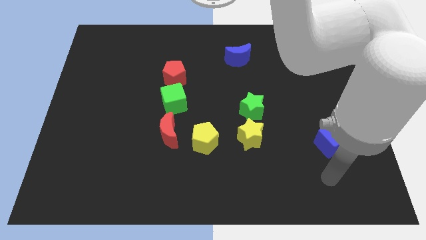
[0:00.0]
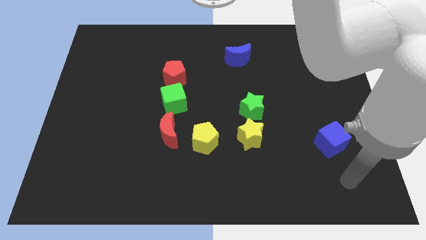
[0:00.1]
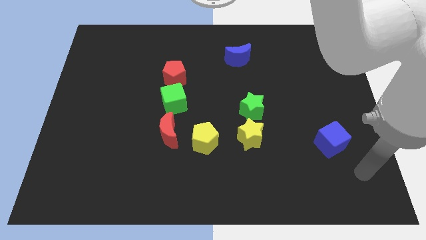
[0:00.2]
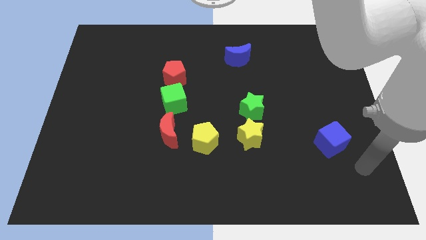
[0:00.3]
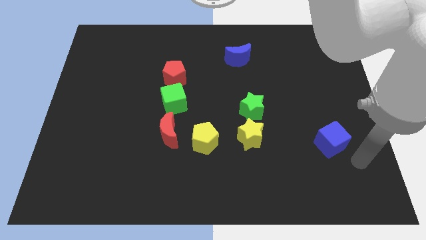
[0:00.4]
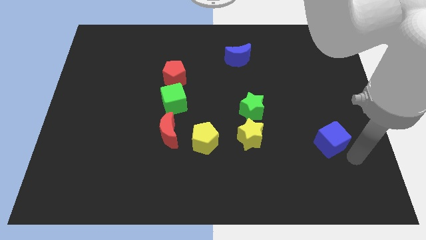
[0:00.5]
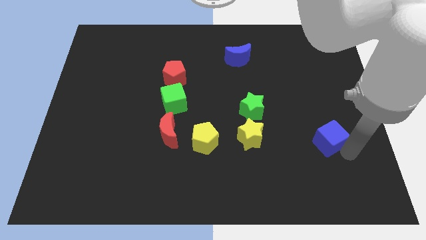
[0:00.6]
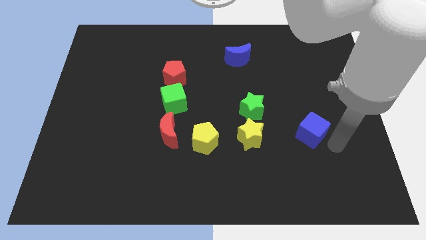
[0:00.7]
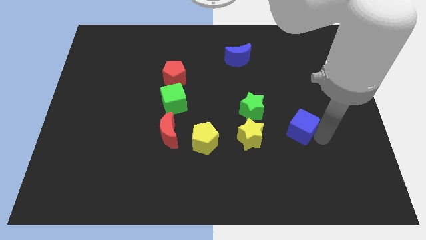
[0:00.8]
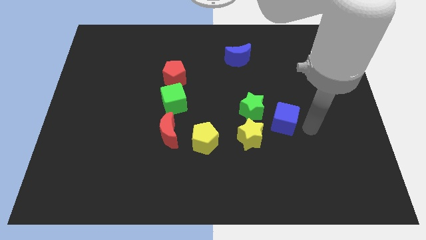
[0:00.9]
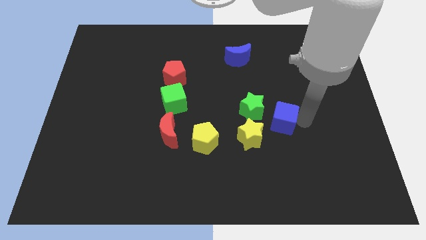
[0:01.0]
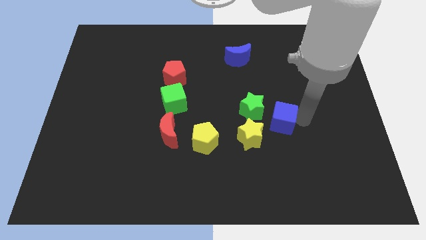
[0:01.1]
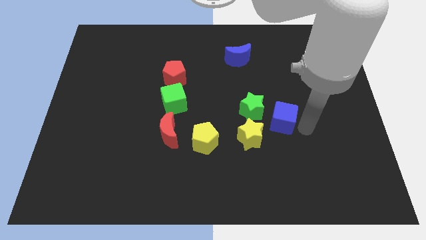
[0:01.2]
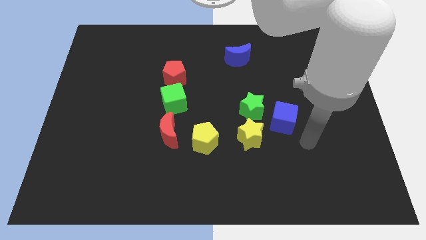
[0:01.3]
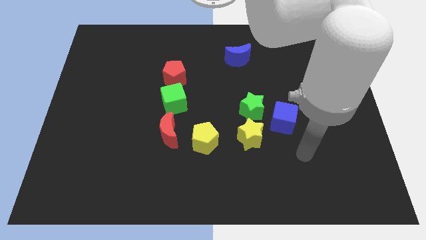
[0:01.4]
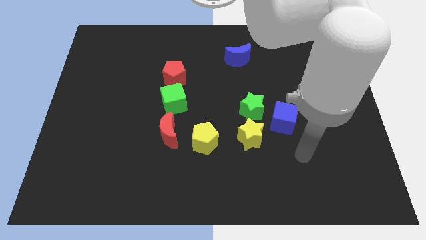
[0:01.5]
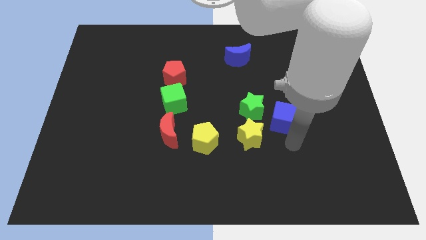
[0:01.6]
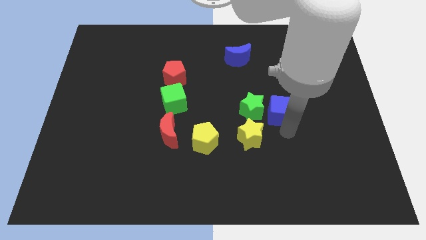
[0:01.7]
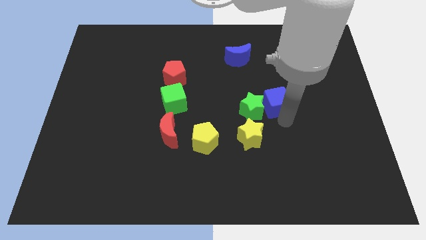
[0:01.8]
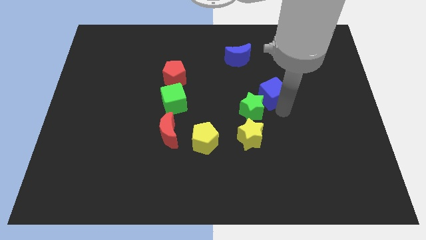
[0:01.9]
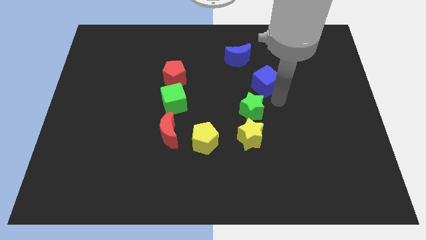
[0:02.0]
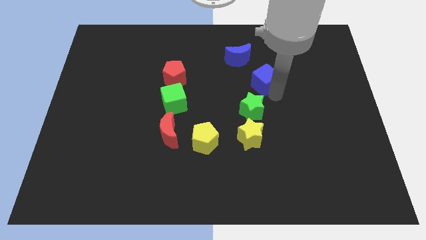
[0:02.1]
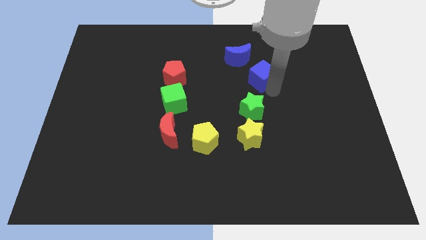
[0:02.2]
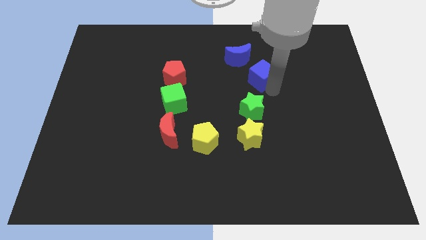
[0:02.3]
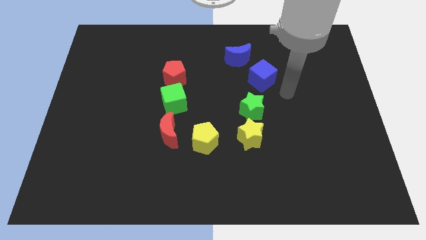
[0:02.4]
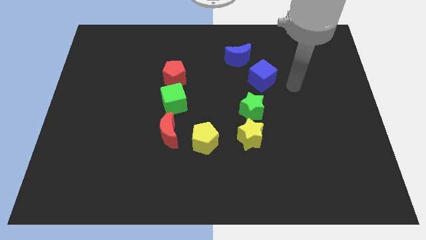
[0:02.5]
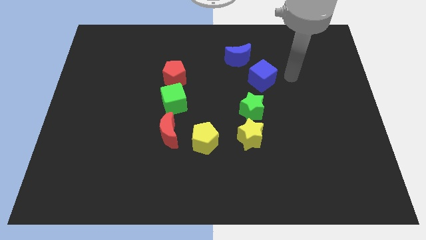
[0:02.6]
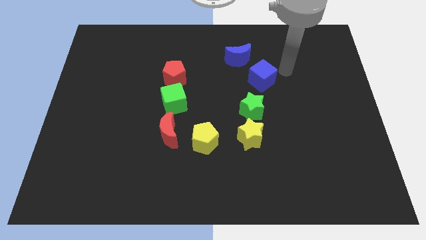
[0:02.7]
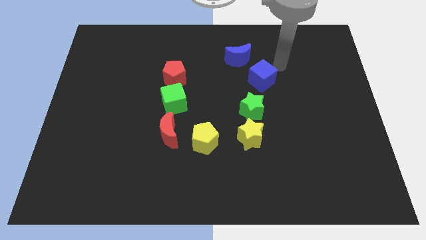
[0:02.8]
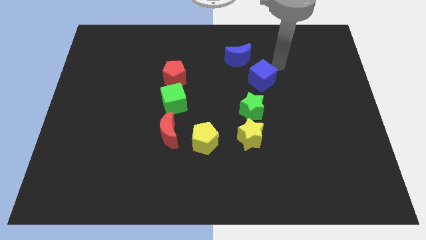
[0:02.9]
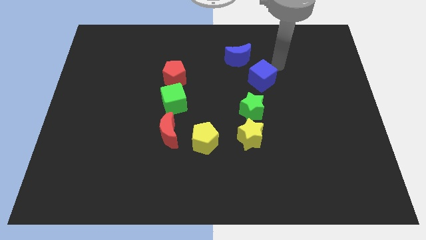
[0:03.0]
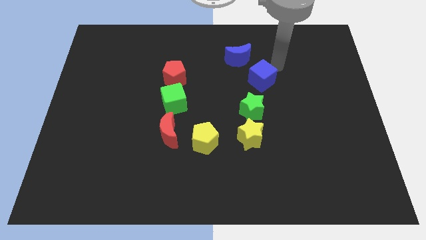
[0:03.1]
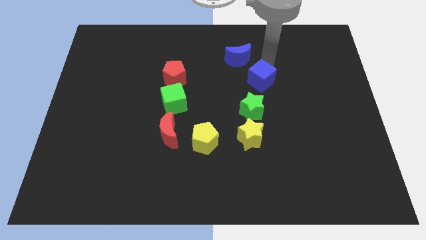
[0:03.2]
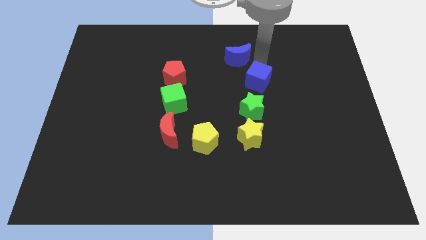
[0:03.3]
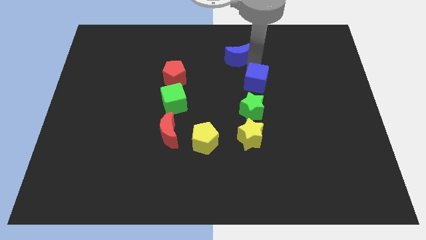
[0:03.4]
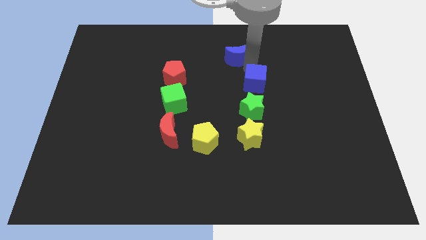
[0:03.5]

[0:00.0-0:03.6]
drag the blue cube above the green star

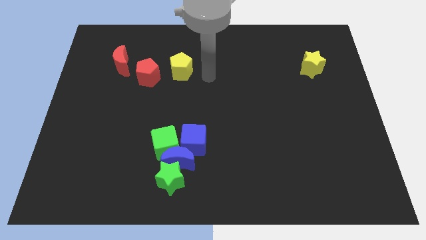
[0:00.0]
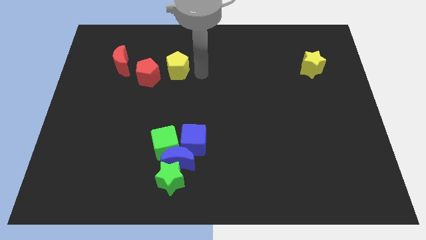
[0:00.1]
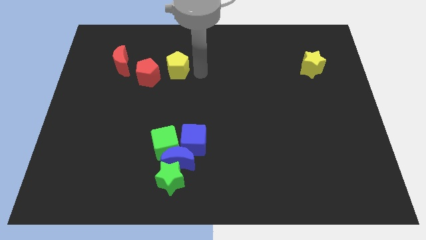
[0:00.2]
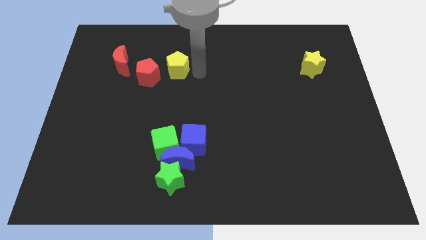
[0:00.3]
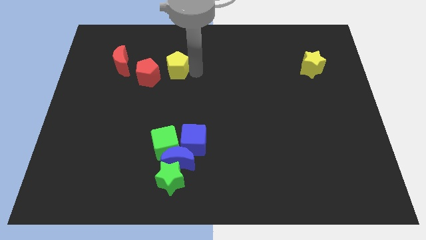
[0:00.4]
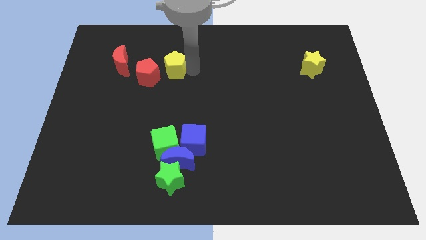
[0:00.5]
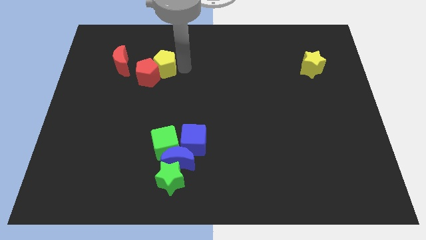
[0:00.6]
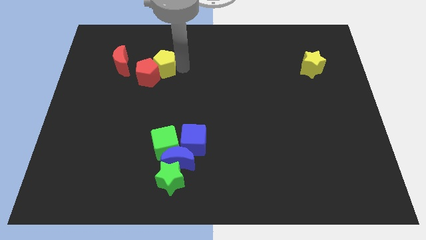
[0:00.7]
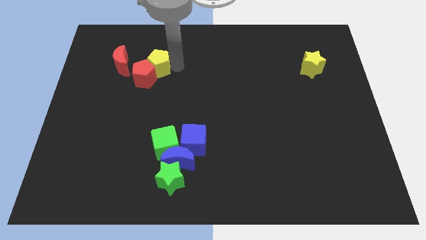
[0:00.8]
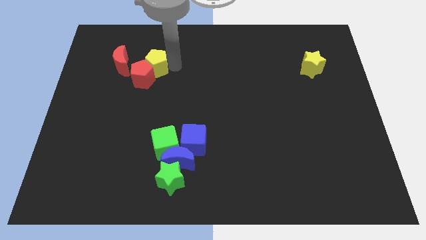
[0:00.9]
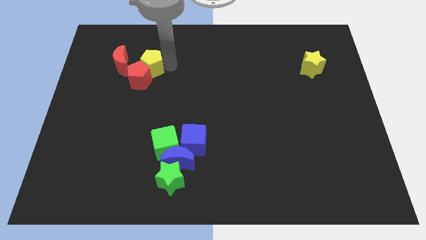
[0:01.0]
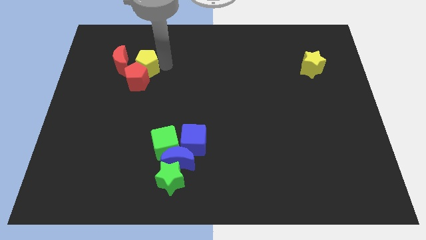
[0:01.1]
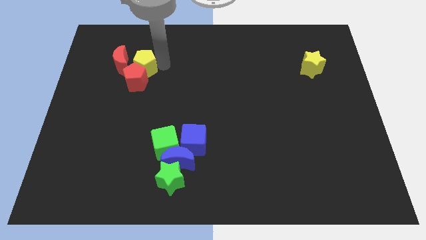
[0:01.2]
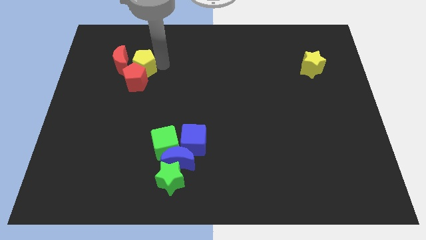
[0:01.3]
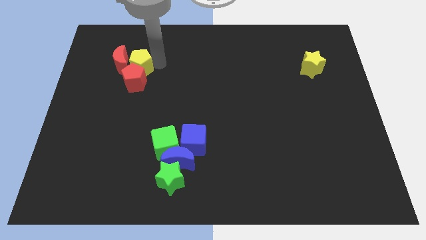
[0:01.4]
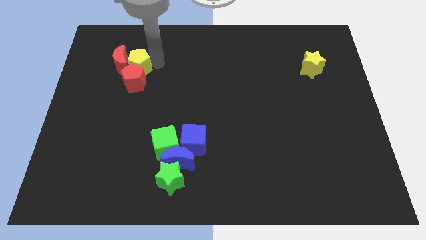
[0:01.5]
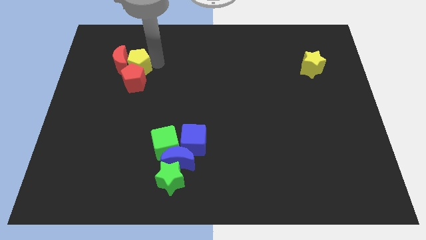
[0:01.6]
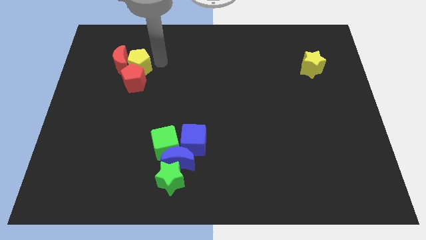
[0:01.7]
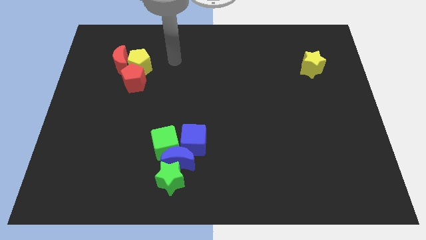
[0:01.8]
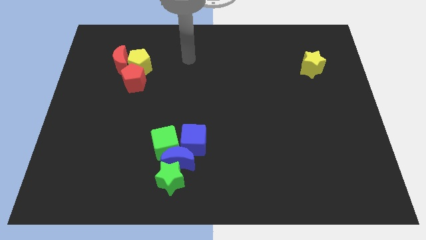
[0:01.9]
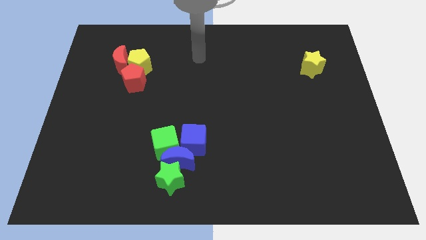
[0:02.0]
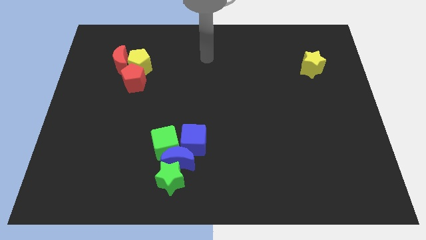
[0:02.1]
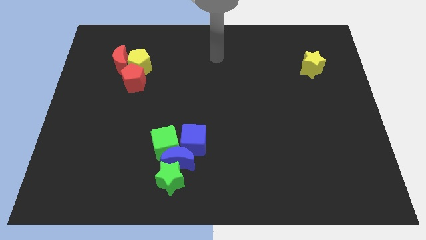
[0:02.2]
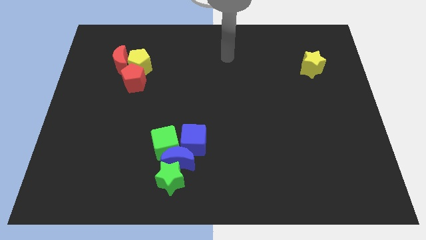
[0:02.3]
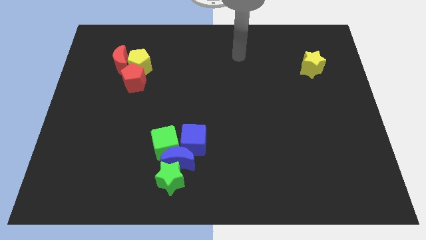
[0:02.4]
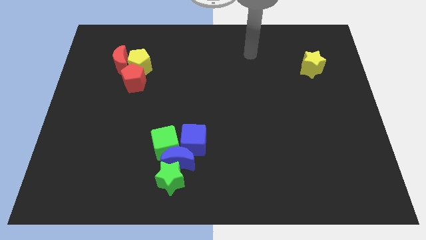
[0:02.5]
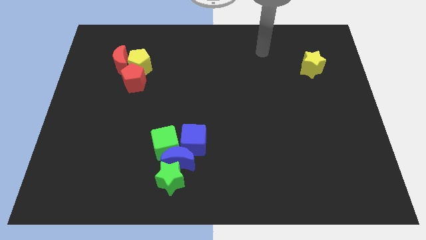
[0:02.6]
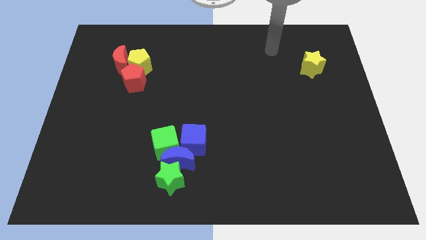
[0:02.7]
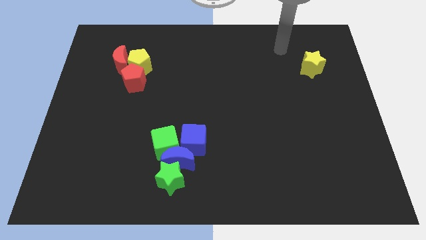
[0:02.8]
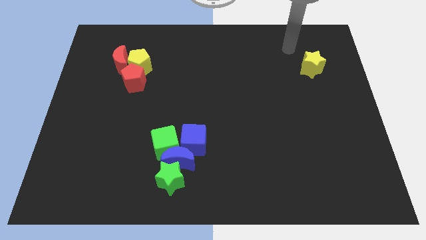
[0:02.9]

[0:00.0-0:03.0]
push yellow pentagon and red pentagon near red crescent

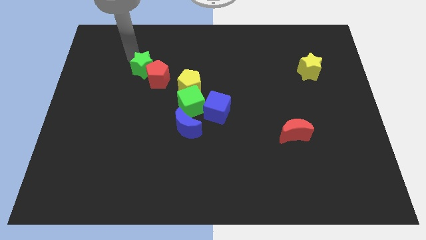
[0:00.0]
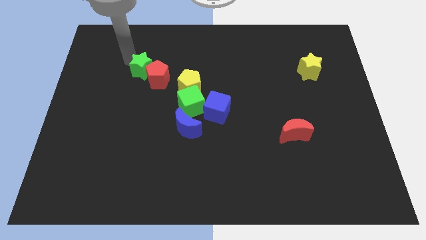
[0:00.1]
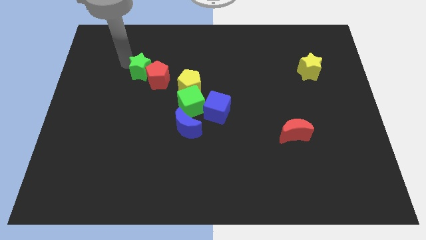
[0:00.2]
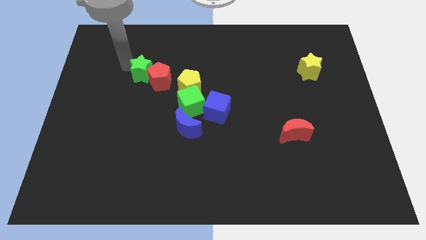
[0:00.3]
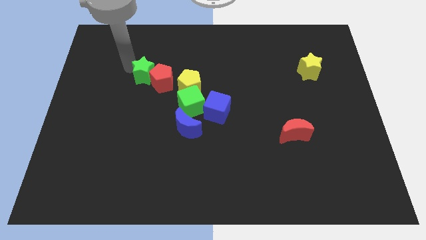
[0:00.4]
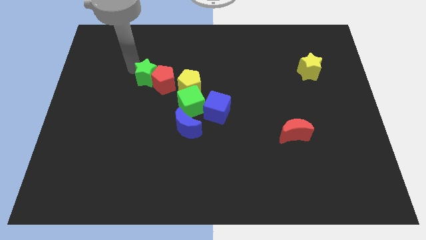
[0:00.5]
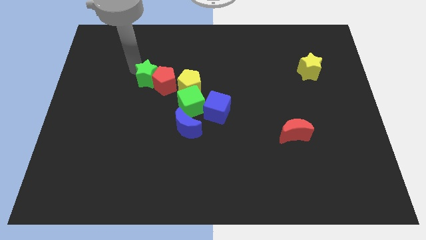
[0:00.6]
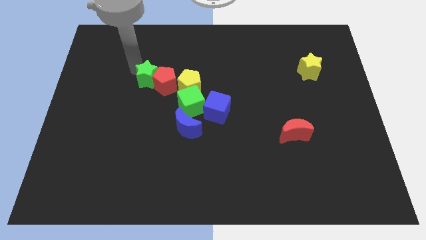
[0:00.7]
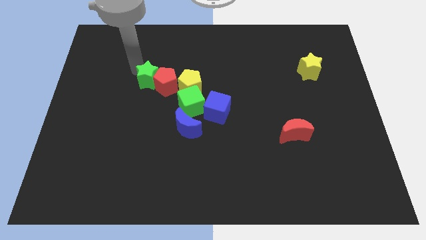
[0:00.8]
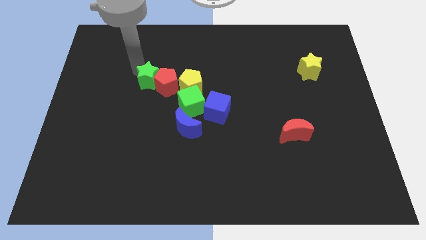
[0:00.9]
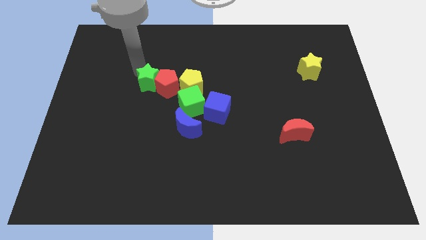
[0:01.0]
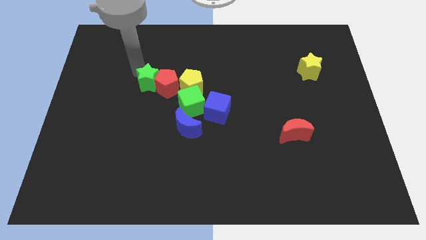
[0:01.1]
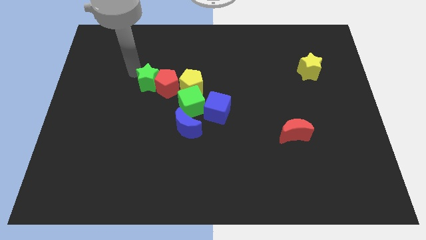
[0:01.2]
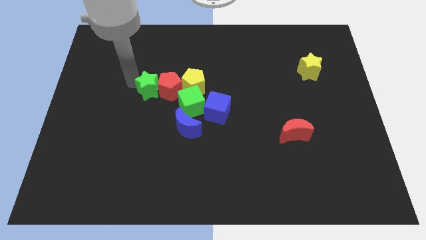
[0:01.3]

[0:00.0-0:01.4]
push green star towards yellow pentagon

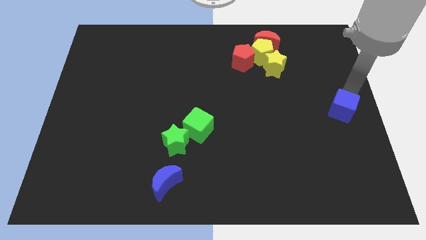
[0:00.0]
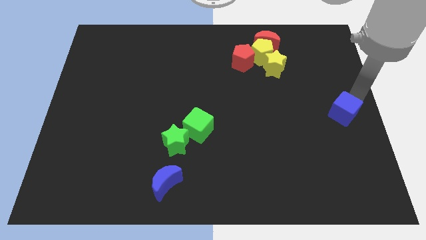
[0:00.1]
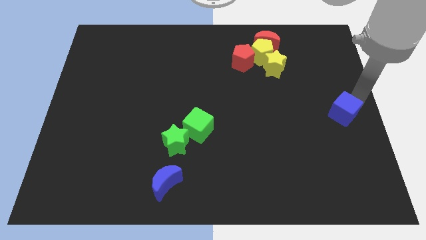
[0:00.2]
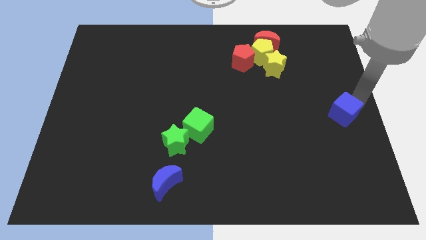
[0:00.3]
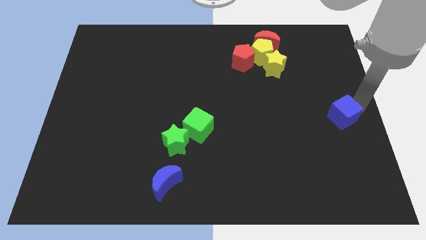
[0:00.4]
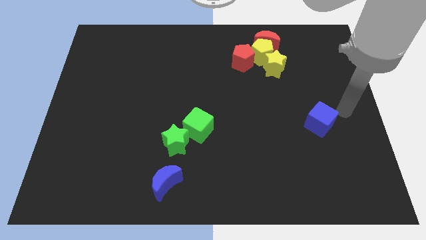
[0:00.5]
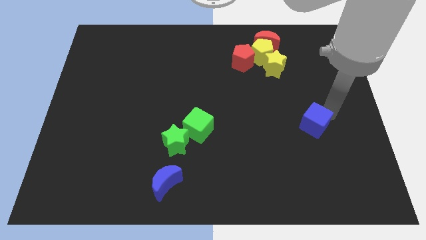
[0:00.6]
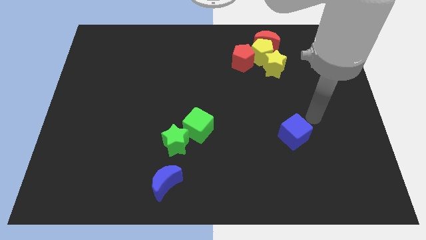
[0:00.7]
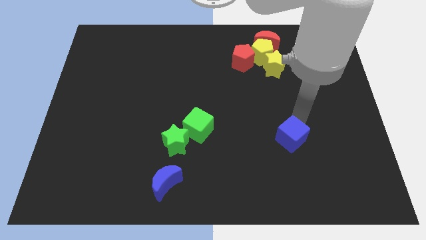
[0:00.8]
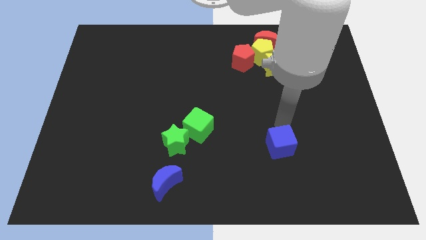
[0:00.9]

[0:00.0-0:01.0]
push blue cube below yellow star

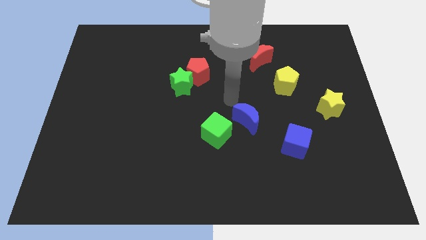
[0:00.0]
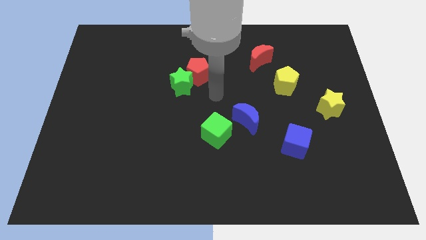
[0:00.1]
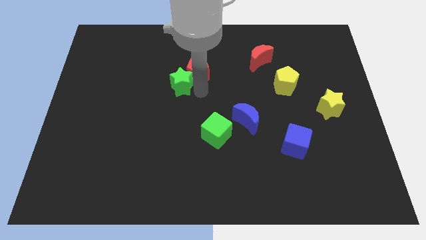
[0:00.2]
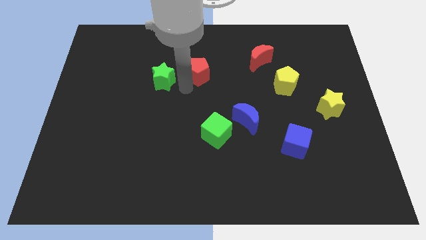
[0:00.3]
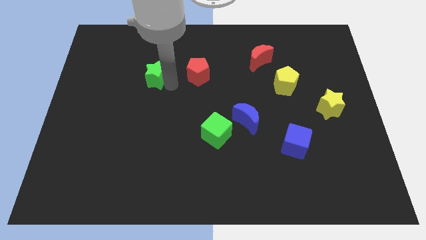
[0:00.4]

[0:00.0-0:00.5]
move green star to the left
